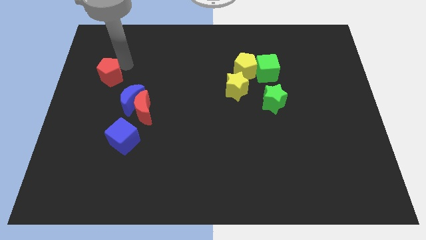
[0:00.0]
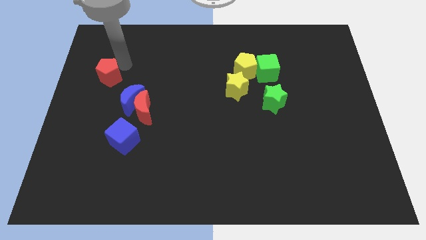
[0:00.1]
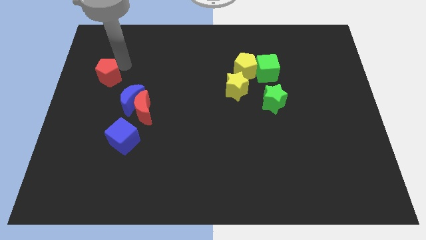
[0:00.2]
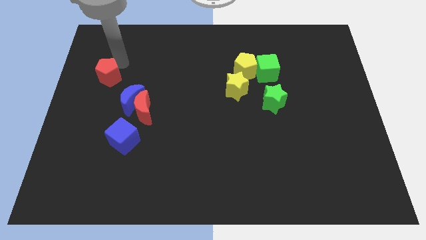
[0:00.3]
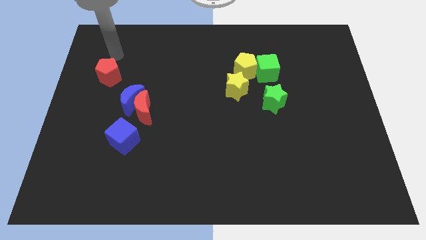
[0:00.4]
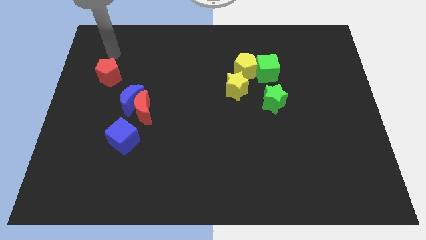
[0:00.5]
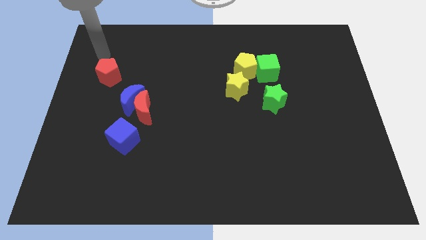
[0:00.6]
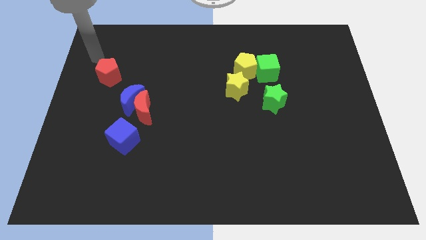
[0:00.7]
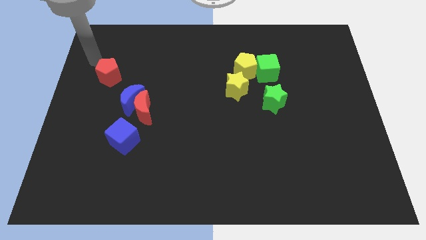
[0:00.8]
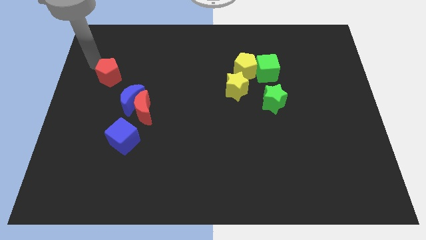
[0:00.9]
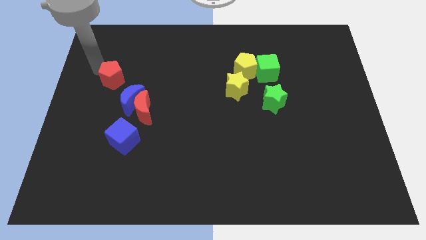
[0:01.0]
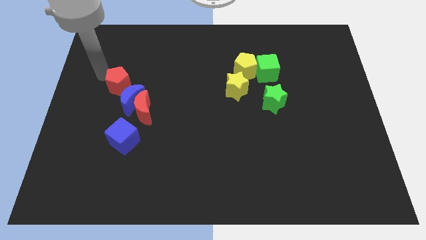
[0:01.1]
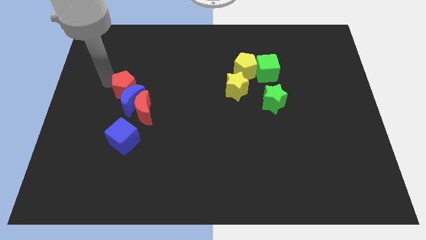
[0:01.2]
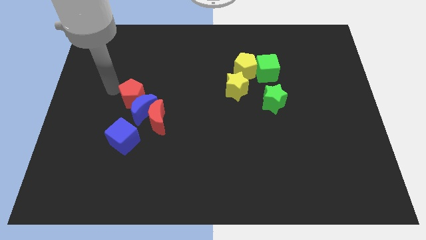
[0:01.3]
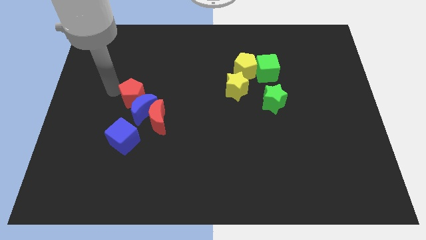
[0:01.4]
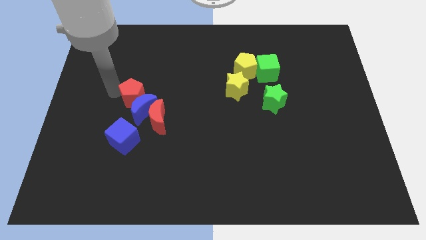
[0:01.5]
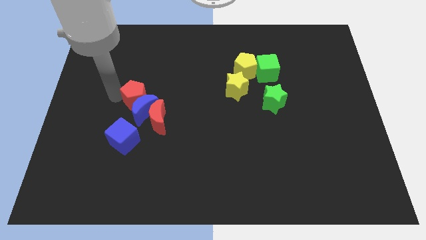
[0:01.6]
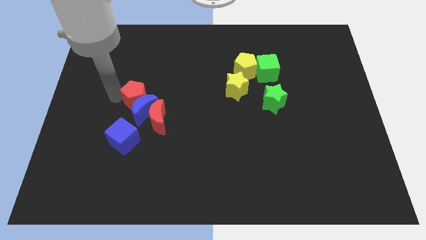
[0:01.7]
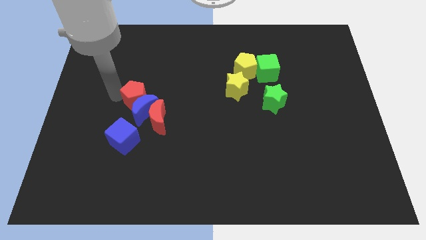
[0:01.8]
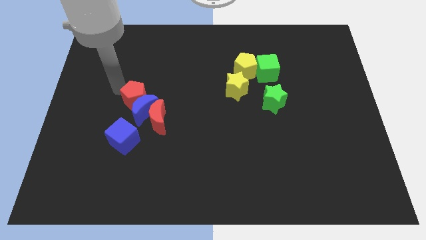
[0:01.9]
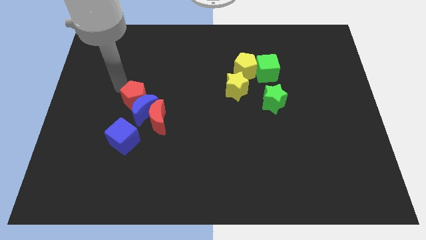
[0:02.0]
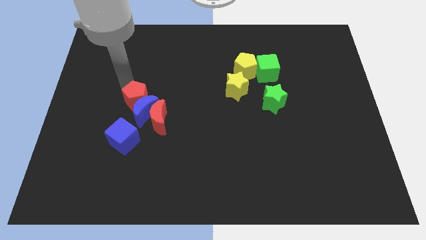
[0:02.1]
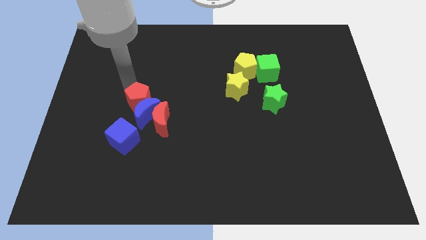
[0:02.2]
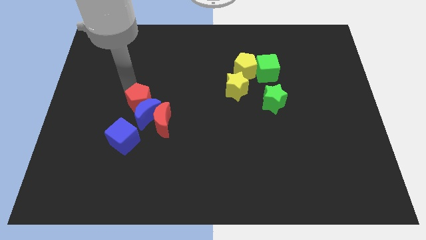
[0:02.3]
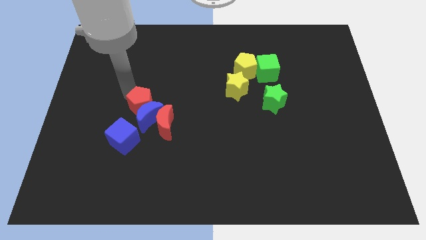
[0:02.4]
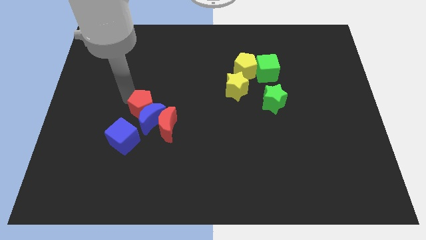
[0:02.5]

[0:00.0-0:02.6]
push red pentagon slightly towards down

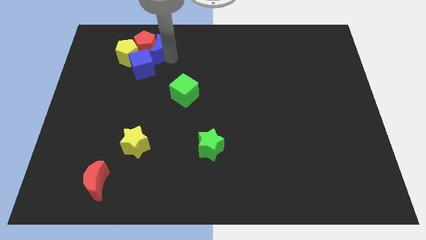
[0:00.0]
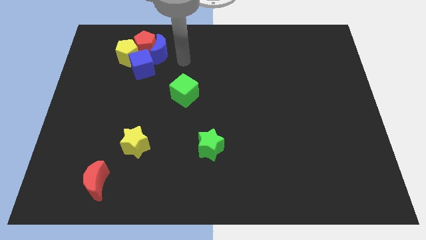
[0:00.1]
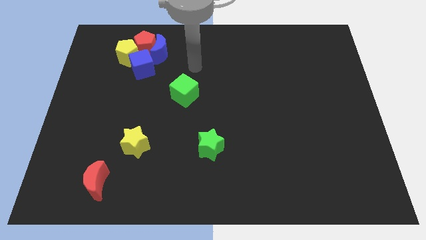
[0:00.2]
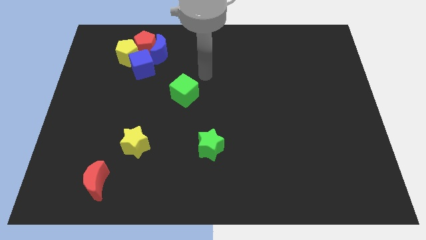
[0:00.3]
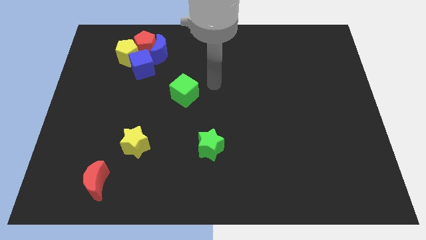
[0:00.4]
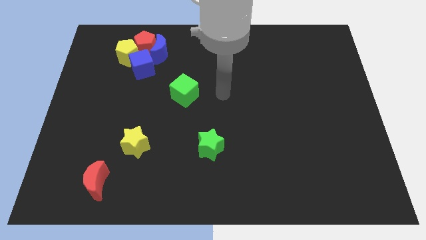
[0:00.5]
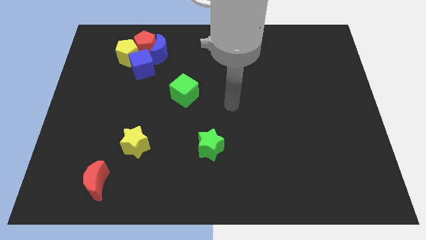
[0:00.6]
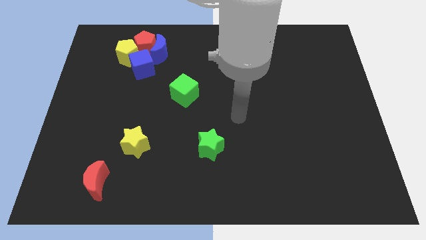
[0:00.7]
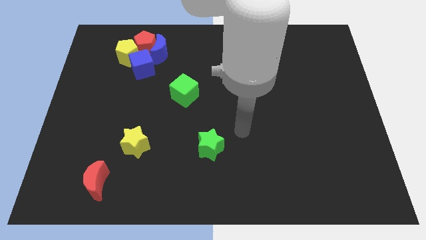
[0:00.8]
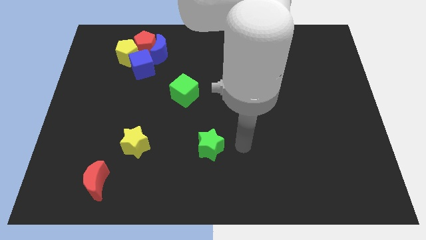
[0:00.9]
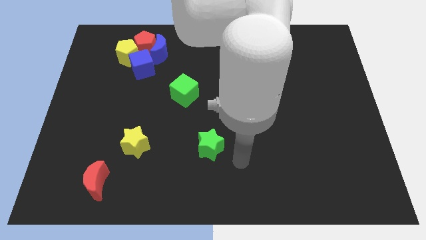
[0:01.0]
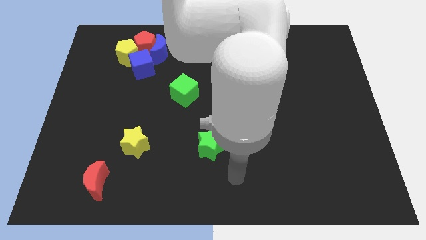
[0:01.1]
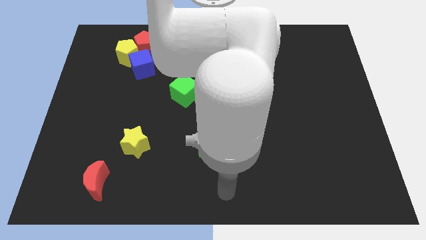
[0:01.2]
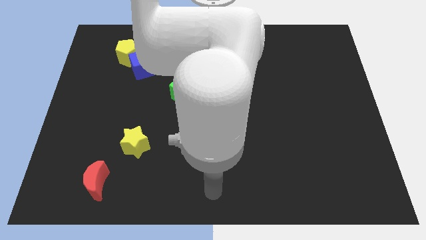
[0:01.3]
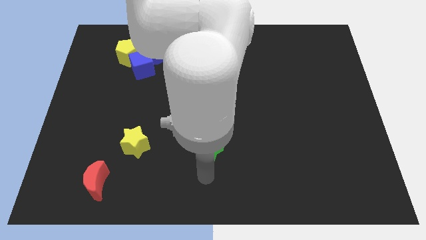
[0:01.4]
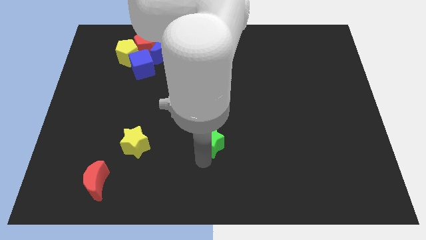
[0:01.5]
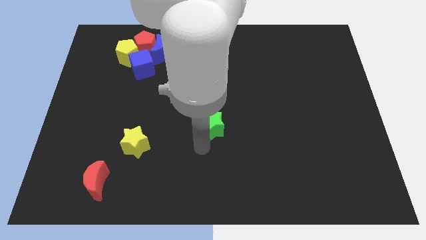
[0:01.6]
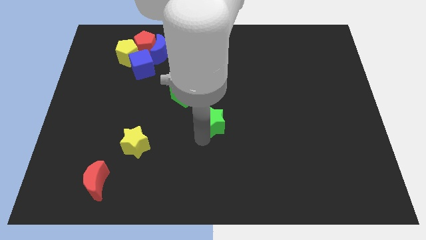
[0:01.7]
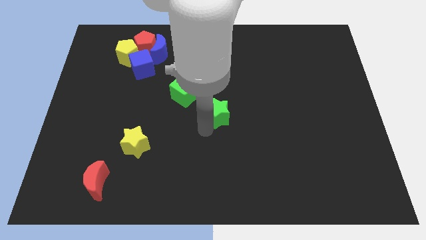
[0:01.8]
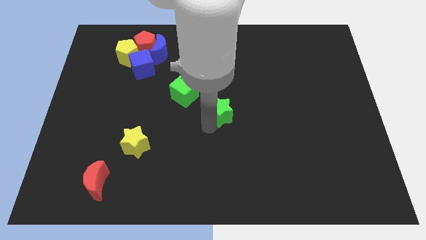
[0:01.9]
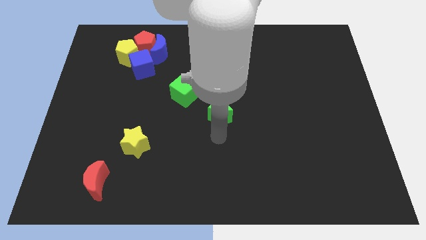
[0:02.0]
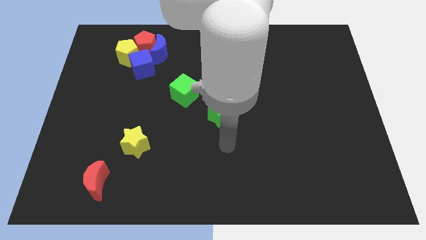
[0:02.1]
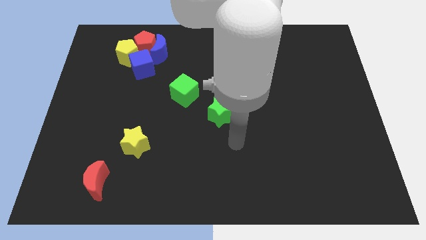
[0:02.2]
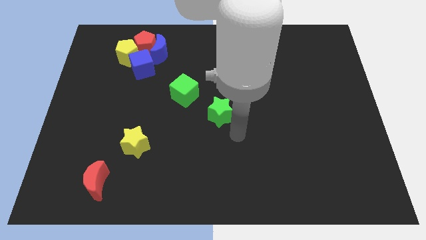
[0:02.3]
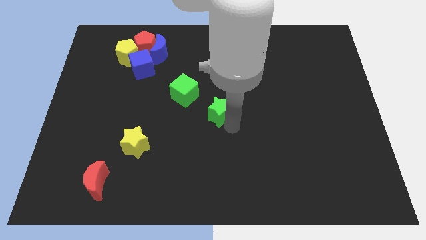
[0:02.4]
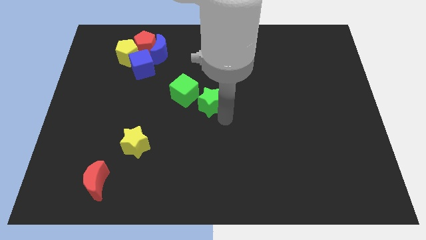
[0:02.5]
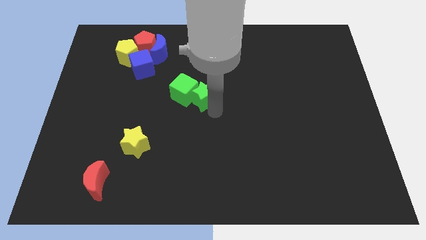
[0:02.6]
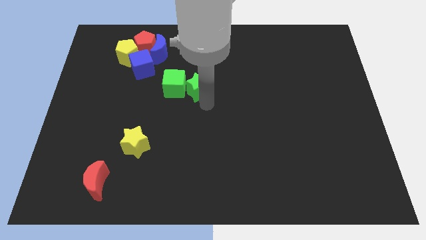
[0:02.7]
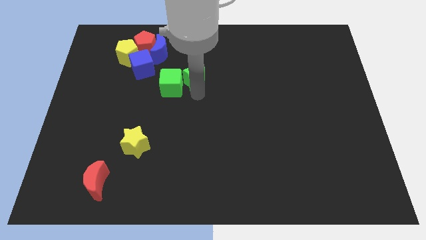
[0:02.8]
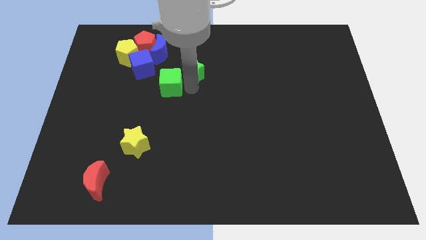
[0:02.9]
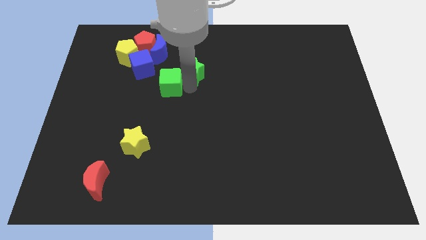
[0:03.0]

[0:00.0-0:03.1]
move green star closer to green cube

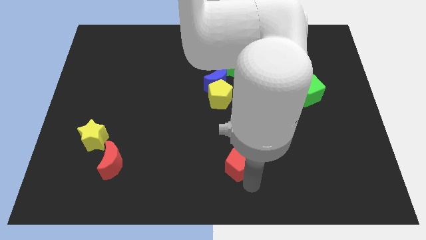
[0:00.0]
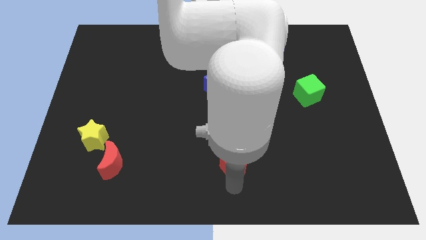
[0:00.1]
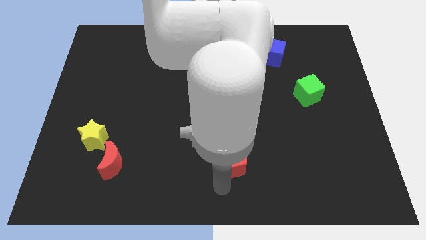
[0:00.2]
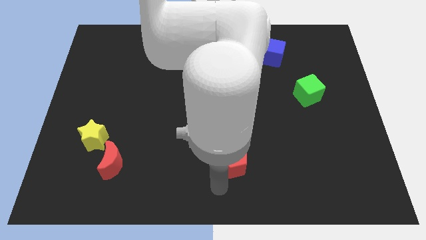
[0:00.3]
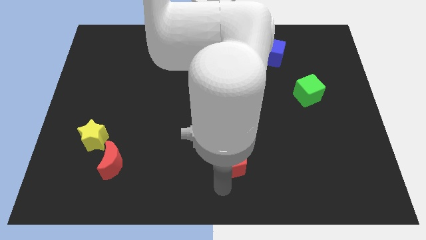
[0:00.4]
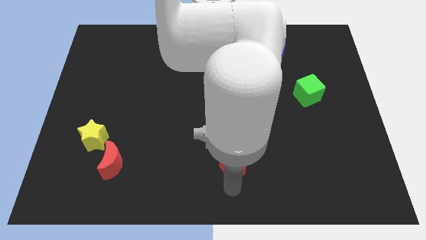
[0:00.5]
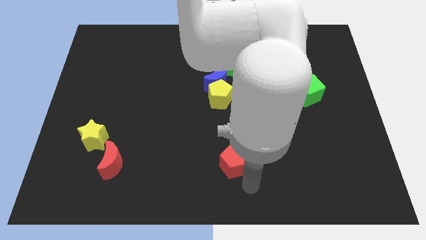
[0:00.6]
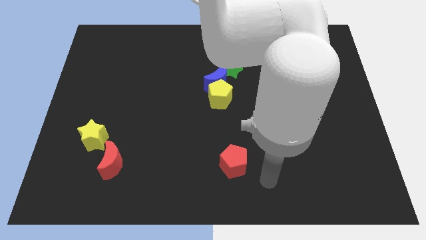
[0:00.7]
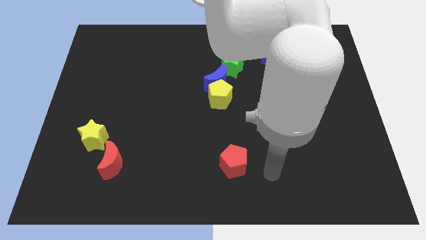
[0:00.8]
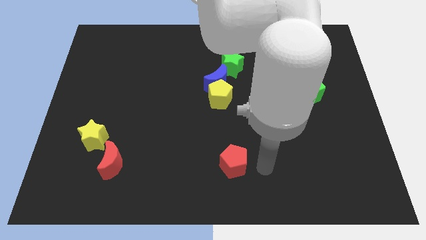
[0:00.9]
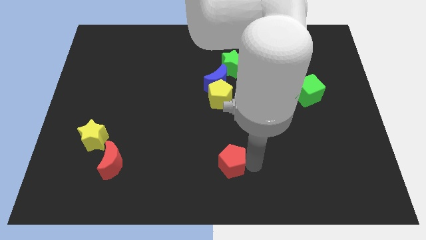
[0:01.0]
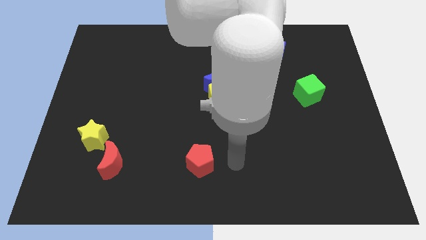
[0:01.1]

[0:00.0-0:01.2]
put the red pentagon vertical to the green star at the bottom

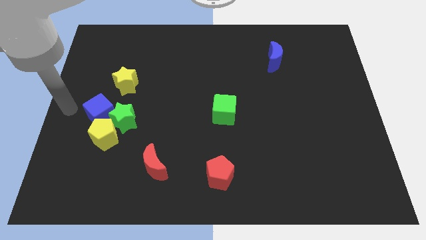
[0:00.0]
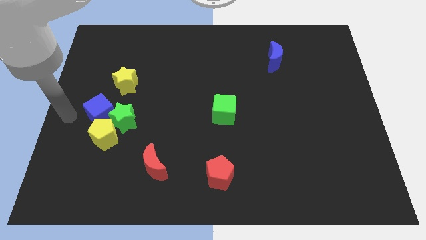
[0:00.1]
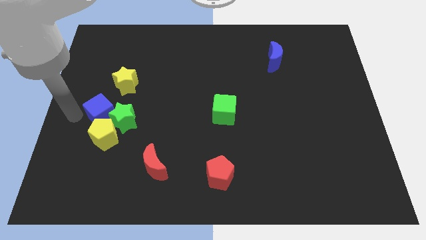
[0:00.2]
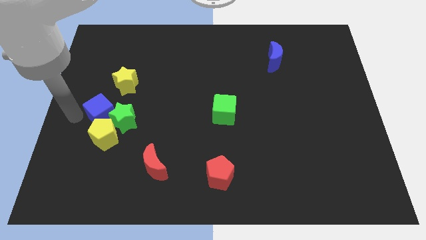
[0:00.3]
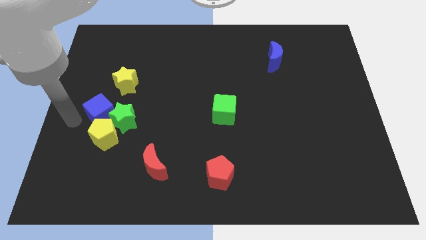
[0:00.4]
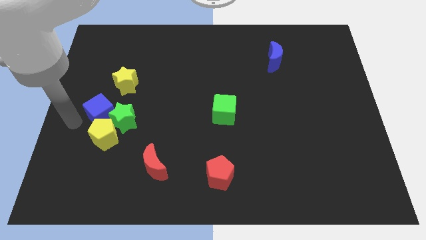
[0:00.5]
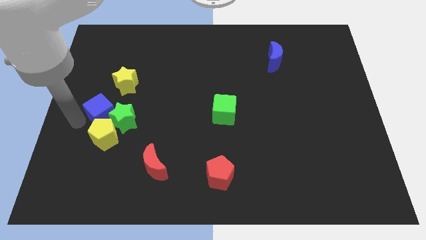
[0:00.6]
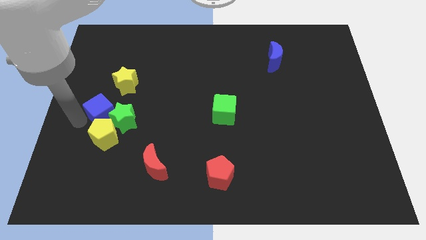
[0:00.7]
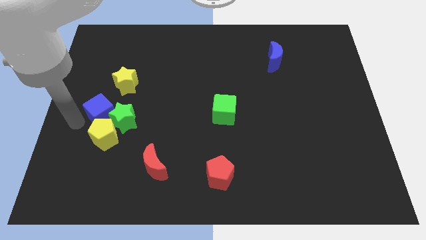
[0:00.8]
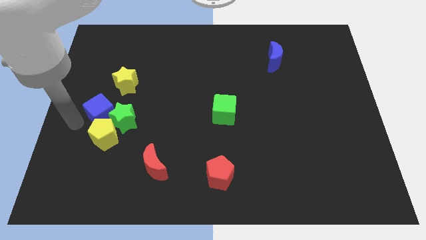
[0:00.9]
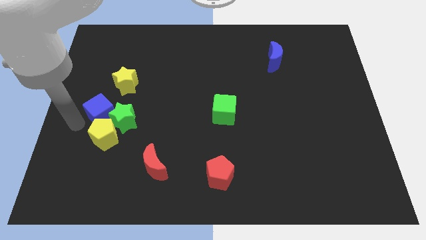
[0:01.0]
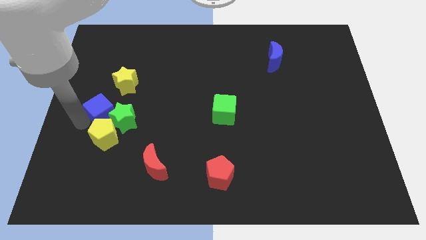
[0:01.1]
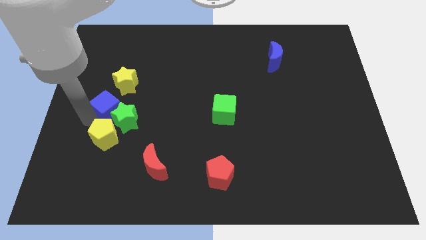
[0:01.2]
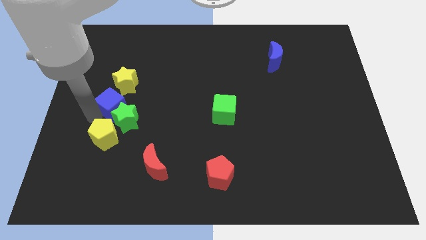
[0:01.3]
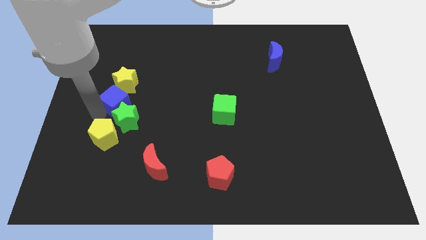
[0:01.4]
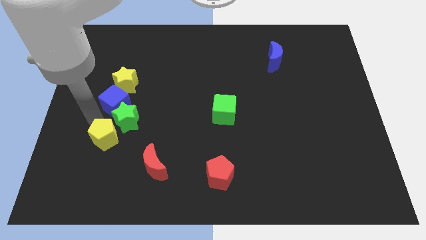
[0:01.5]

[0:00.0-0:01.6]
adjust the blue cube in between green star and yellow star

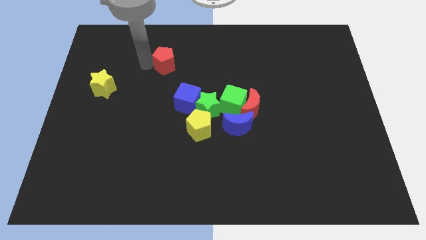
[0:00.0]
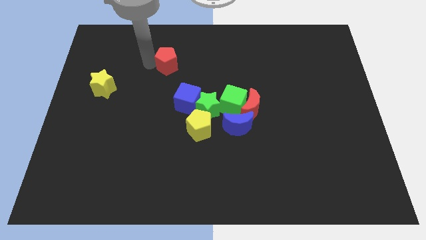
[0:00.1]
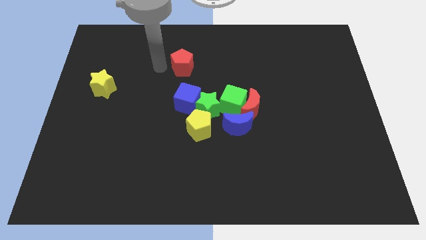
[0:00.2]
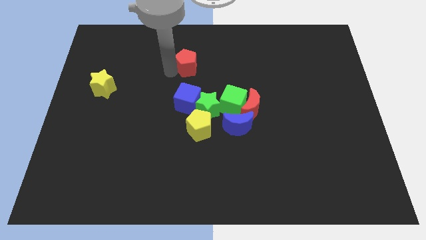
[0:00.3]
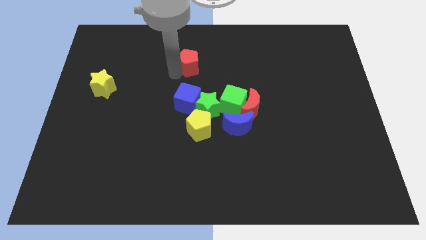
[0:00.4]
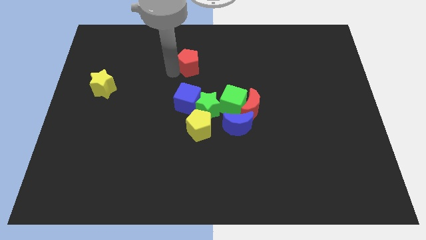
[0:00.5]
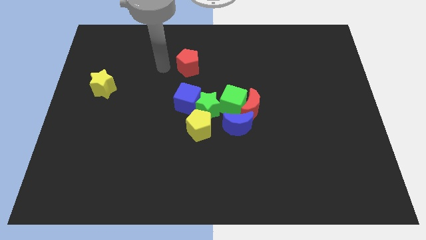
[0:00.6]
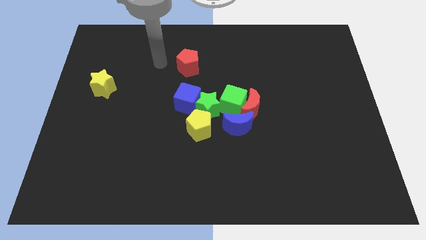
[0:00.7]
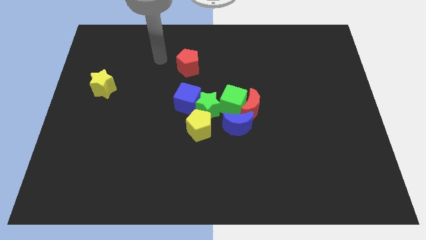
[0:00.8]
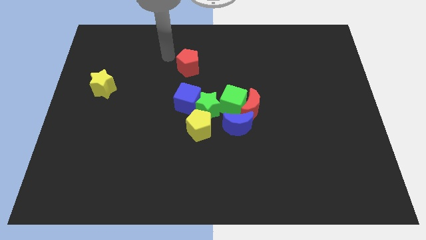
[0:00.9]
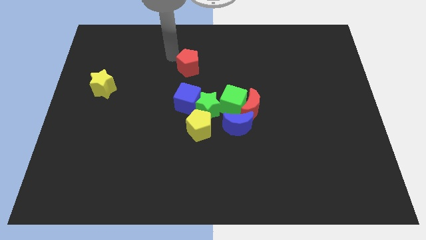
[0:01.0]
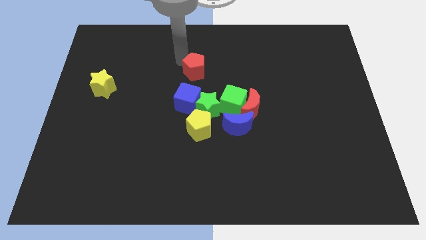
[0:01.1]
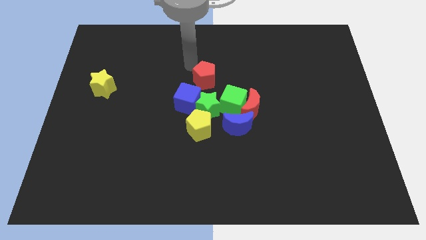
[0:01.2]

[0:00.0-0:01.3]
move the red pentagon to the top of the green star
